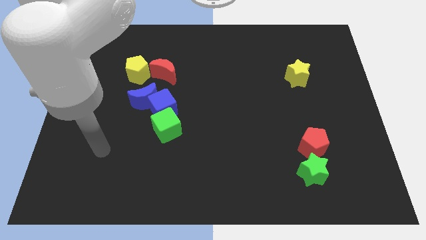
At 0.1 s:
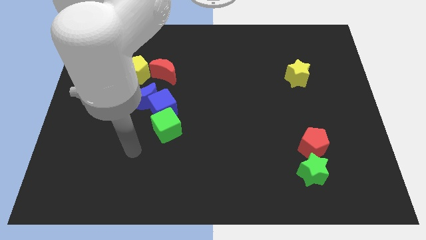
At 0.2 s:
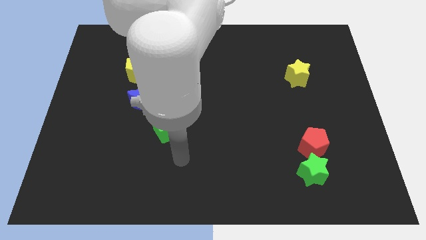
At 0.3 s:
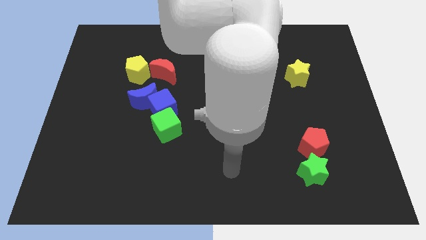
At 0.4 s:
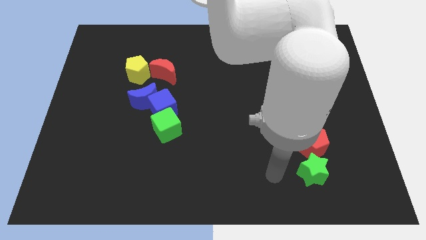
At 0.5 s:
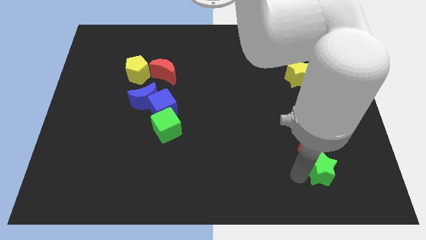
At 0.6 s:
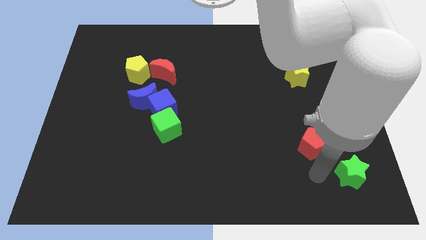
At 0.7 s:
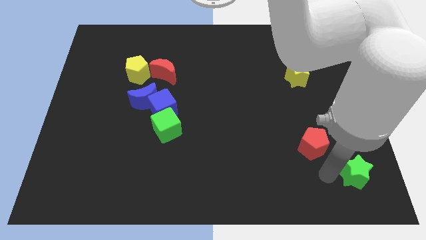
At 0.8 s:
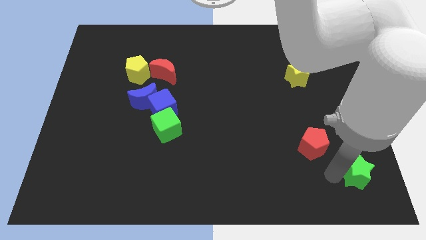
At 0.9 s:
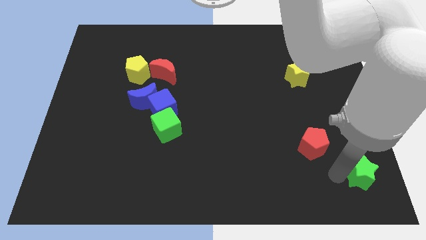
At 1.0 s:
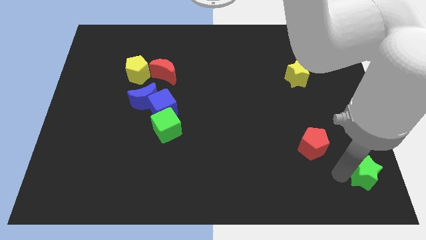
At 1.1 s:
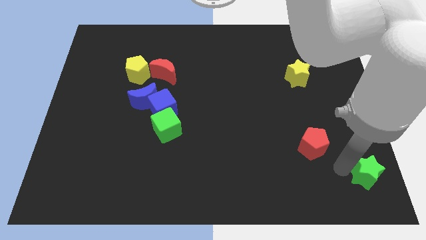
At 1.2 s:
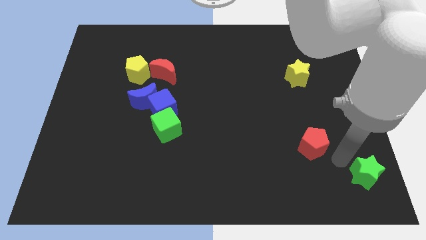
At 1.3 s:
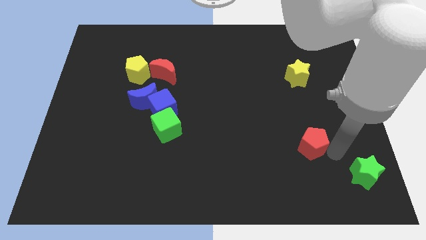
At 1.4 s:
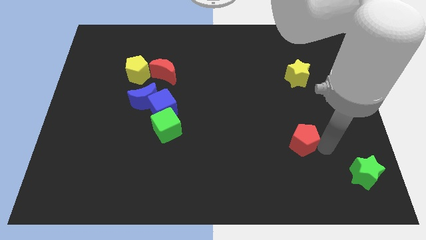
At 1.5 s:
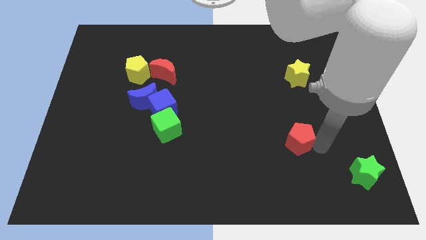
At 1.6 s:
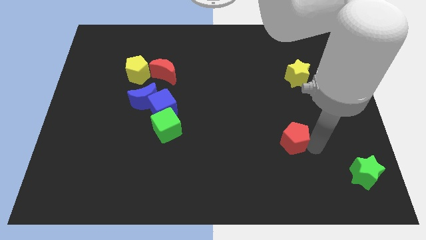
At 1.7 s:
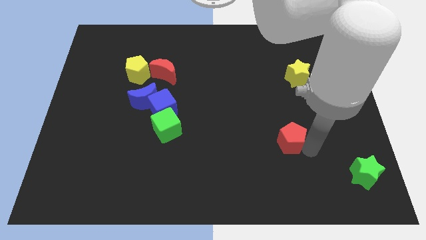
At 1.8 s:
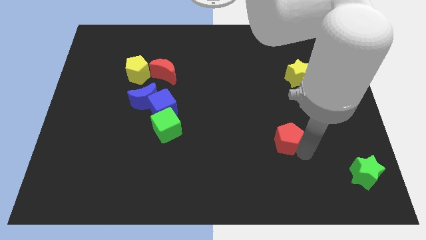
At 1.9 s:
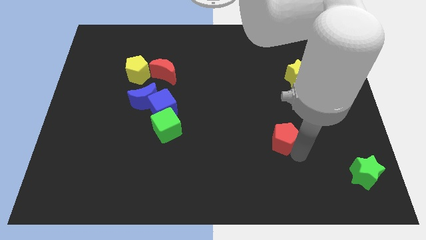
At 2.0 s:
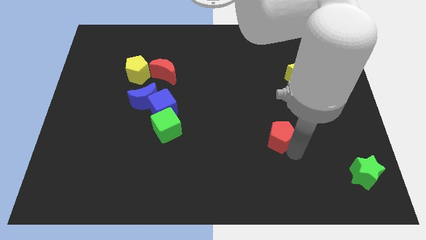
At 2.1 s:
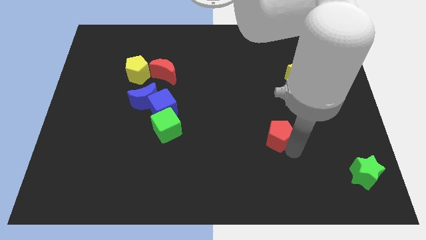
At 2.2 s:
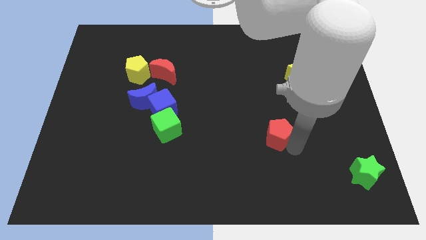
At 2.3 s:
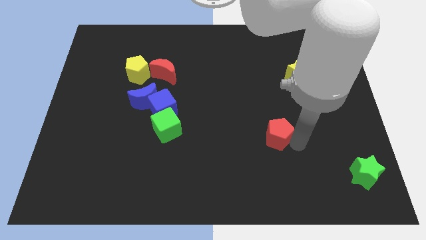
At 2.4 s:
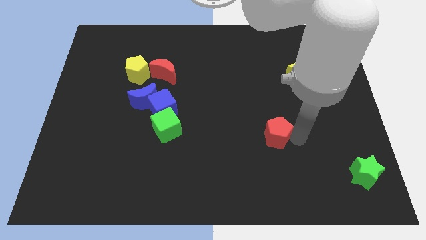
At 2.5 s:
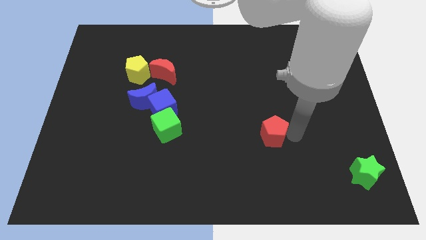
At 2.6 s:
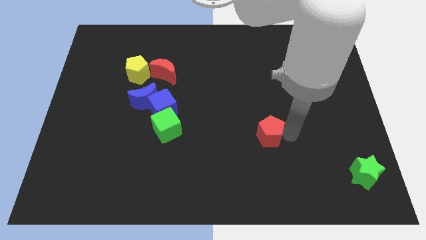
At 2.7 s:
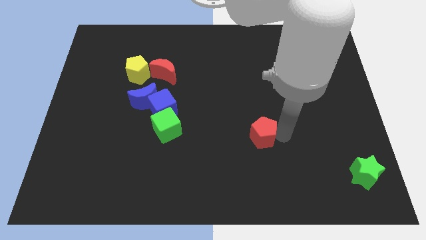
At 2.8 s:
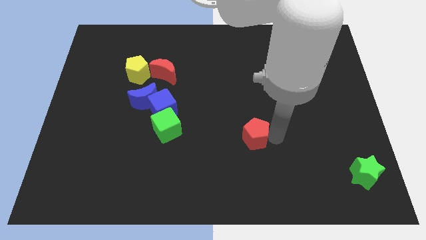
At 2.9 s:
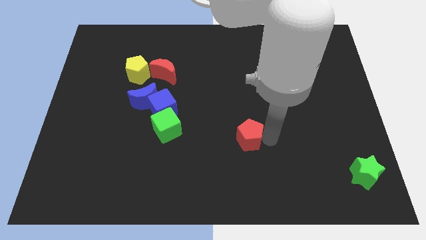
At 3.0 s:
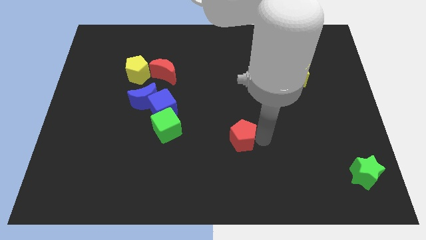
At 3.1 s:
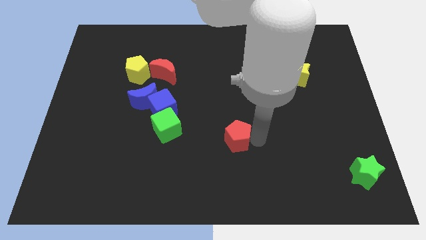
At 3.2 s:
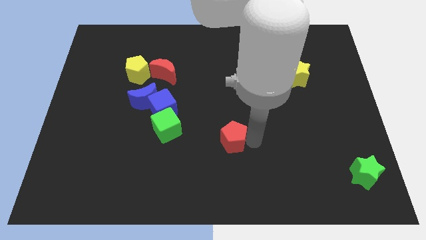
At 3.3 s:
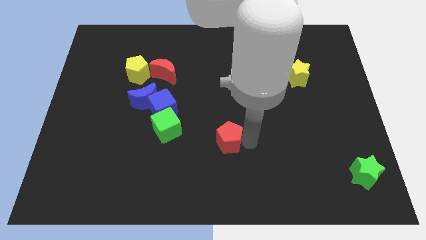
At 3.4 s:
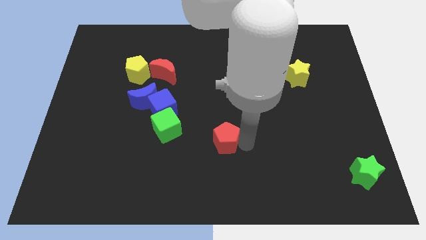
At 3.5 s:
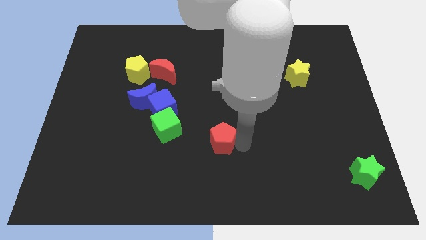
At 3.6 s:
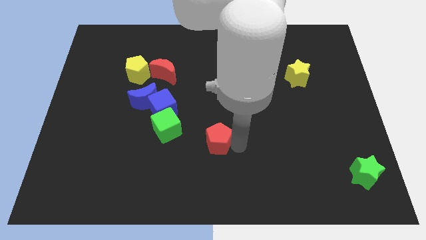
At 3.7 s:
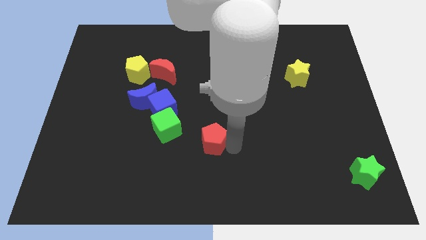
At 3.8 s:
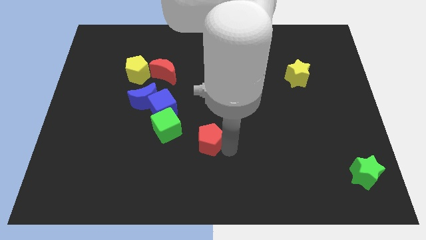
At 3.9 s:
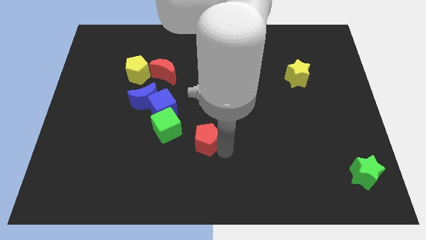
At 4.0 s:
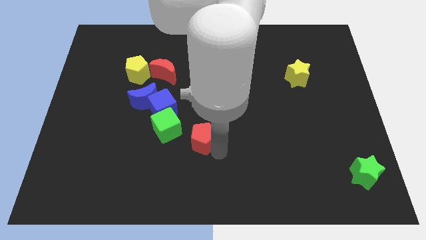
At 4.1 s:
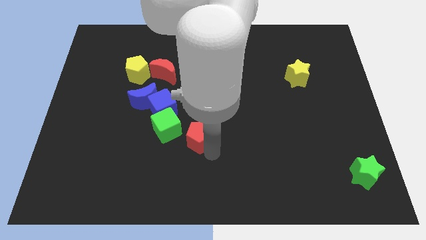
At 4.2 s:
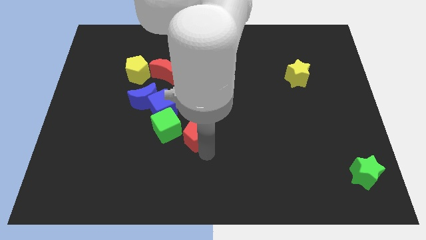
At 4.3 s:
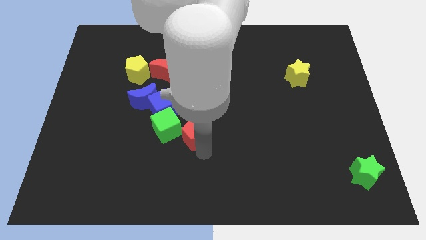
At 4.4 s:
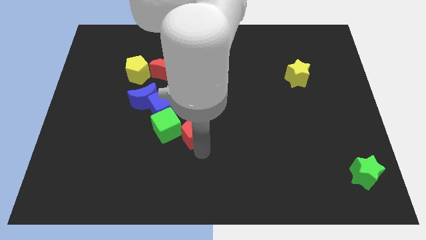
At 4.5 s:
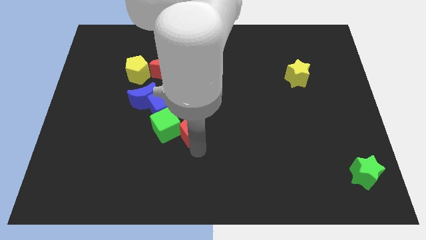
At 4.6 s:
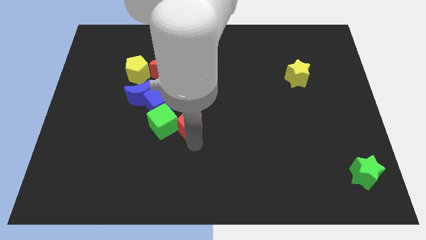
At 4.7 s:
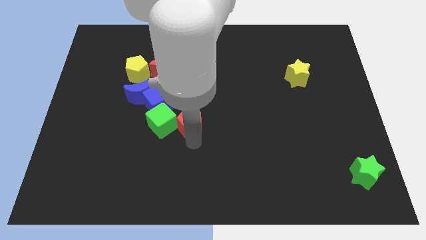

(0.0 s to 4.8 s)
move the red pentagon to the green cube

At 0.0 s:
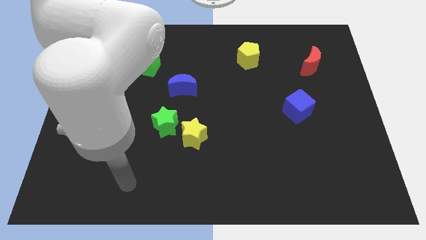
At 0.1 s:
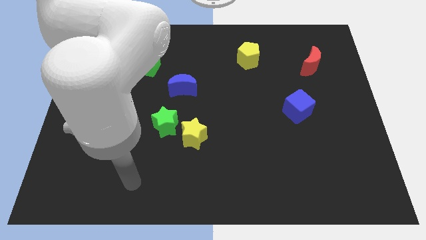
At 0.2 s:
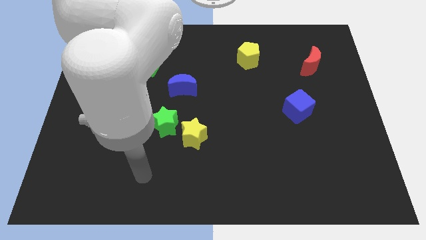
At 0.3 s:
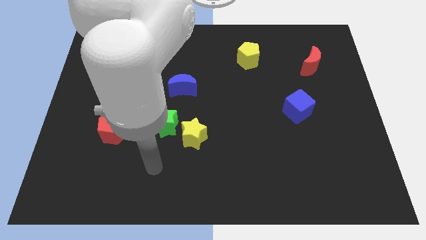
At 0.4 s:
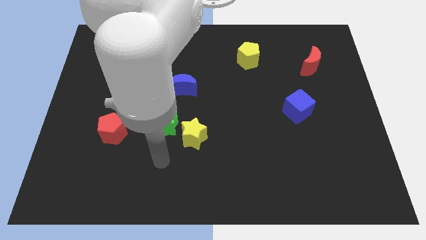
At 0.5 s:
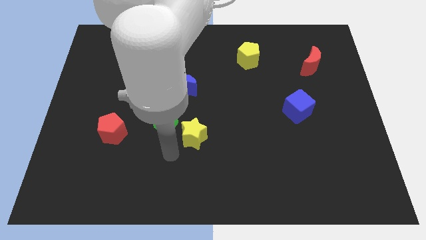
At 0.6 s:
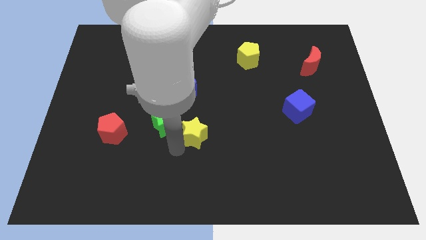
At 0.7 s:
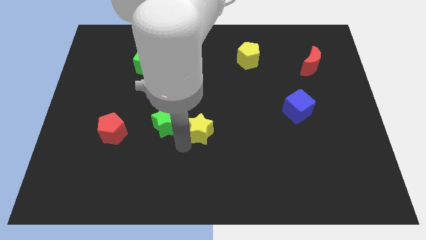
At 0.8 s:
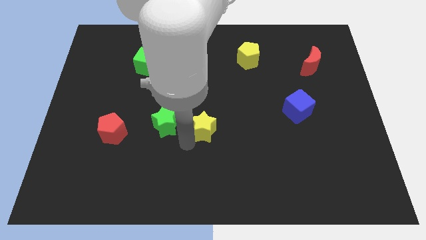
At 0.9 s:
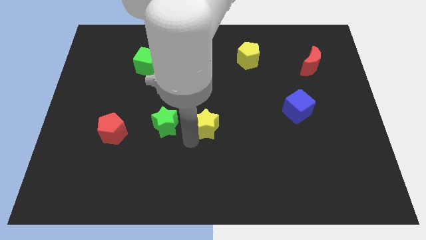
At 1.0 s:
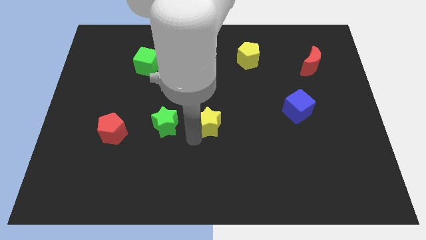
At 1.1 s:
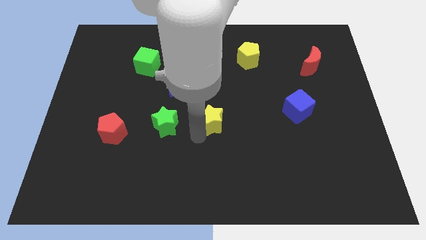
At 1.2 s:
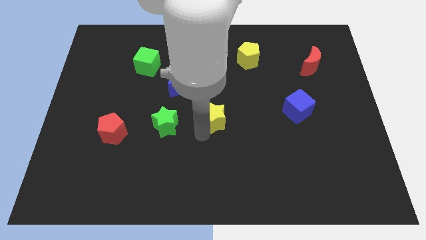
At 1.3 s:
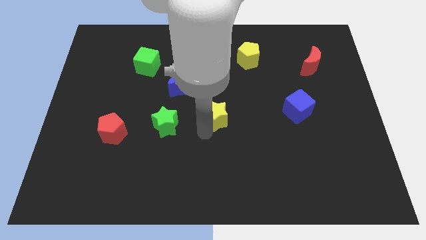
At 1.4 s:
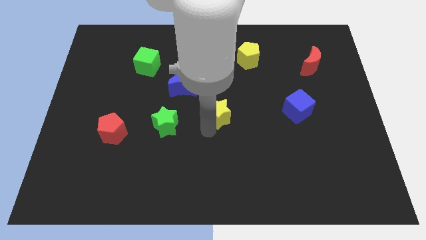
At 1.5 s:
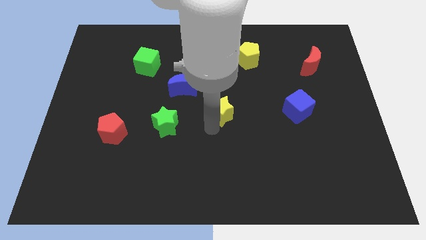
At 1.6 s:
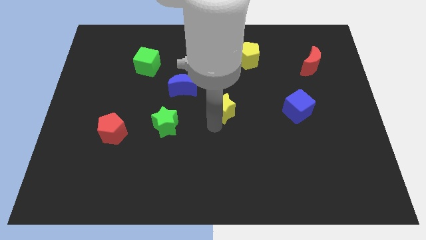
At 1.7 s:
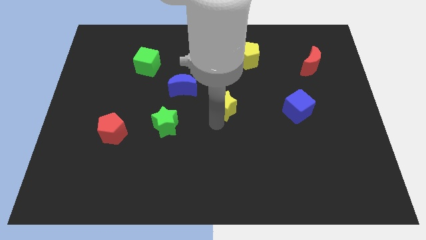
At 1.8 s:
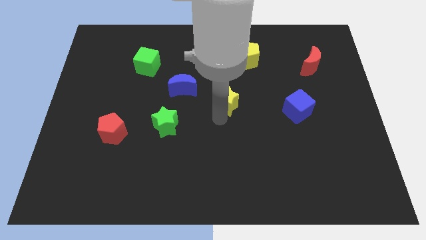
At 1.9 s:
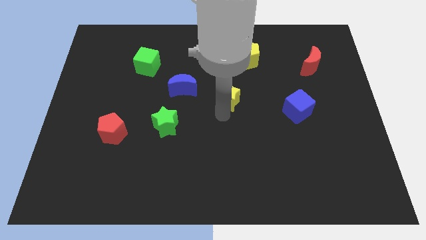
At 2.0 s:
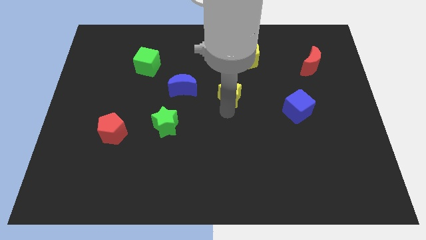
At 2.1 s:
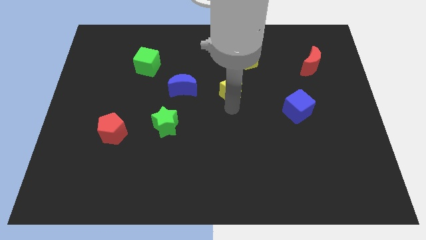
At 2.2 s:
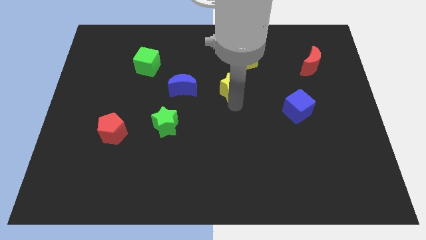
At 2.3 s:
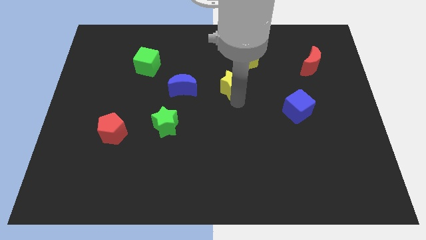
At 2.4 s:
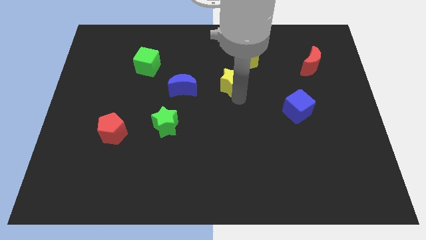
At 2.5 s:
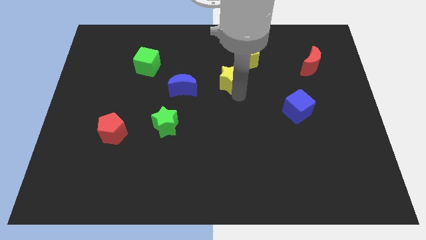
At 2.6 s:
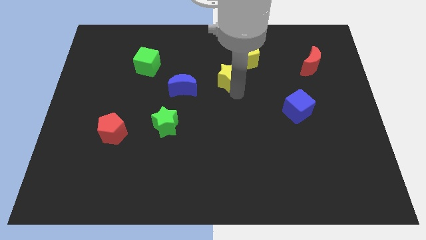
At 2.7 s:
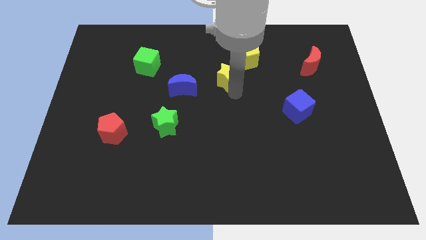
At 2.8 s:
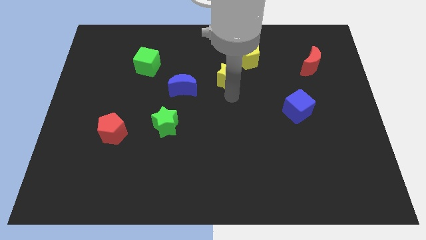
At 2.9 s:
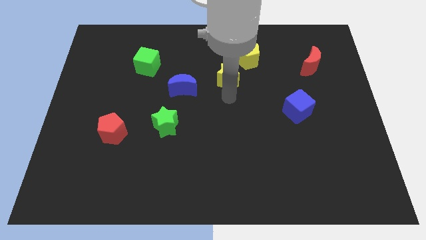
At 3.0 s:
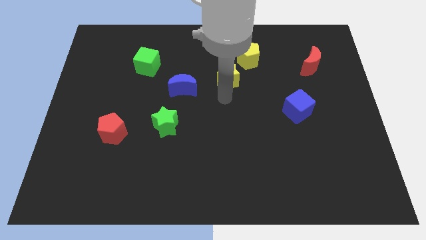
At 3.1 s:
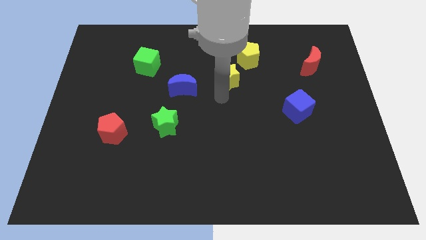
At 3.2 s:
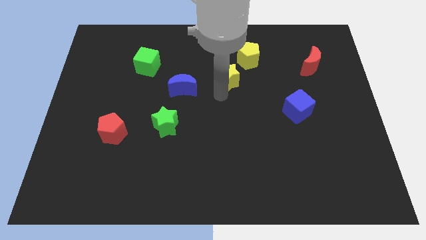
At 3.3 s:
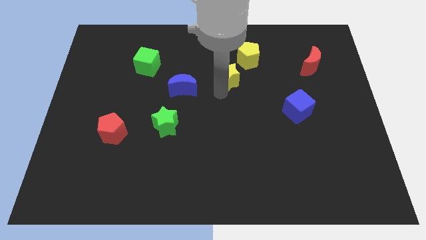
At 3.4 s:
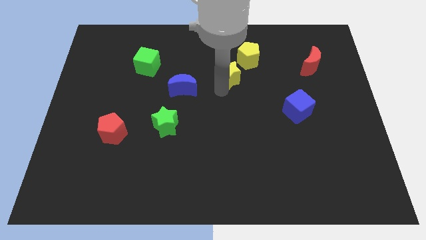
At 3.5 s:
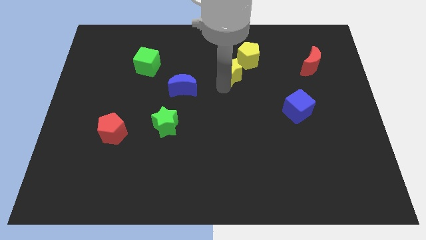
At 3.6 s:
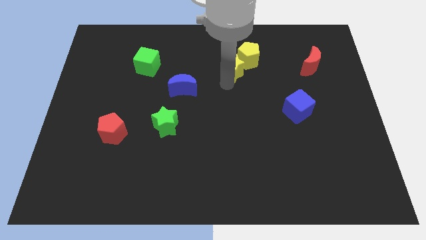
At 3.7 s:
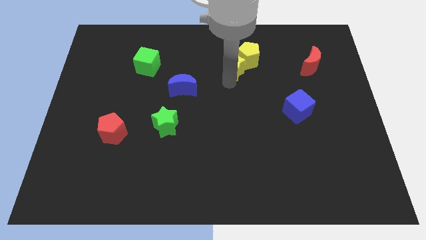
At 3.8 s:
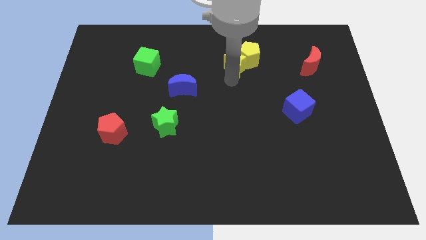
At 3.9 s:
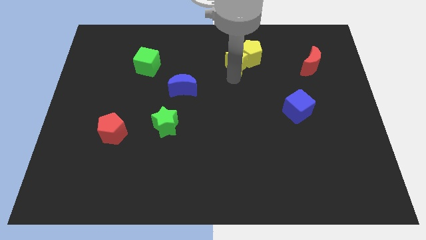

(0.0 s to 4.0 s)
put the yellow star to the yellow pentagon
